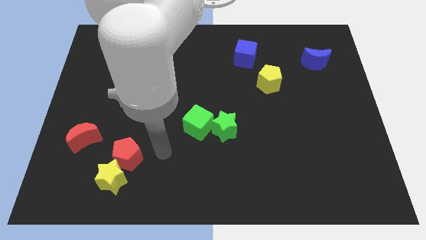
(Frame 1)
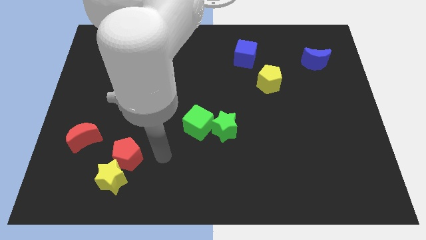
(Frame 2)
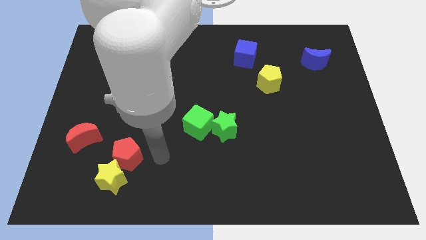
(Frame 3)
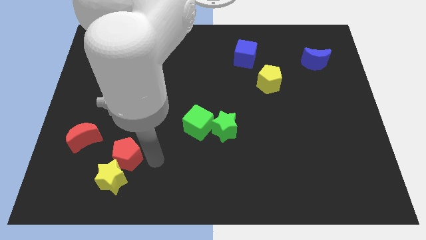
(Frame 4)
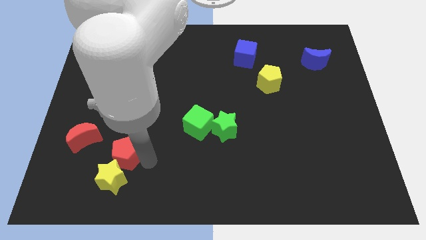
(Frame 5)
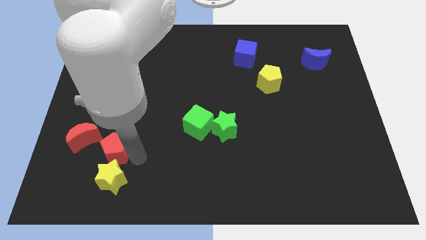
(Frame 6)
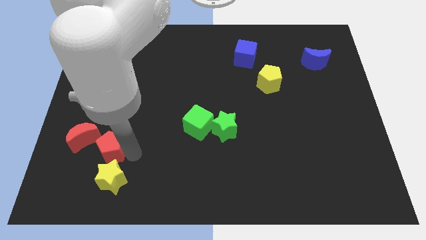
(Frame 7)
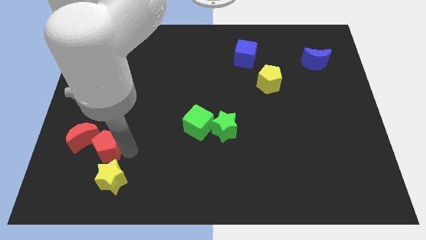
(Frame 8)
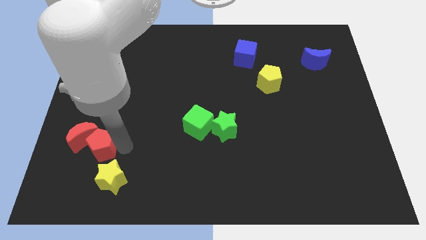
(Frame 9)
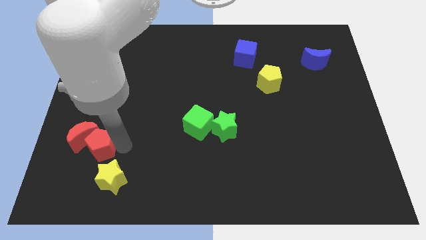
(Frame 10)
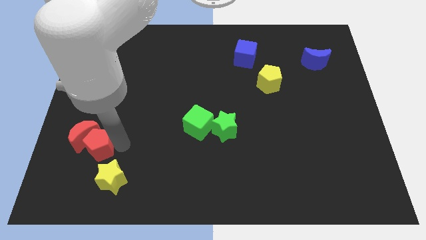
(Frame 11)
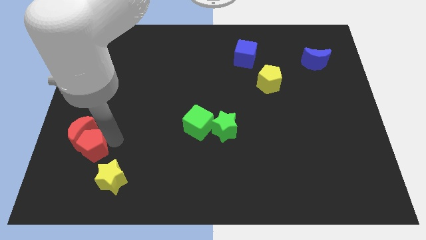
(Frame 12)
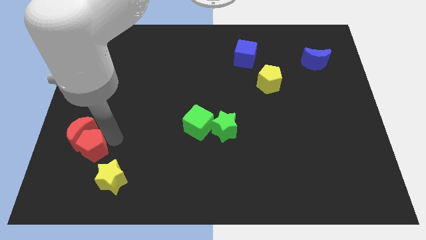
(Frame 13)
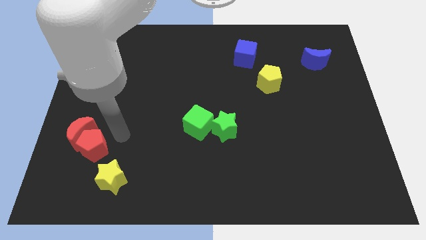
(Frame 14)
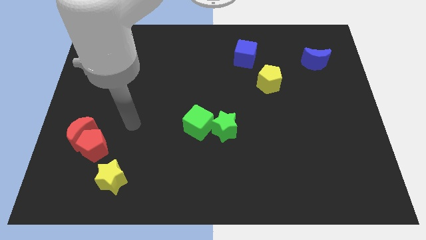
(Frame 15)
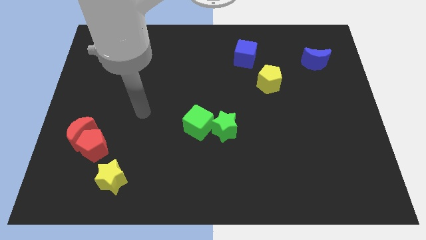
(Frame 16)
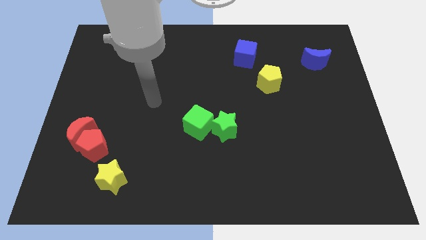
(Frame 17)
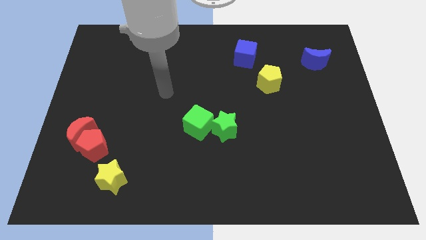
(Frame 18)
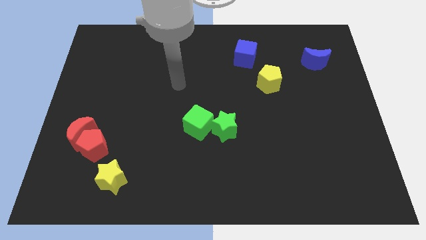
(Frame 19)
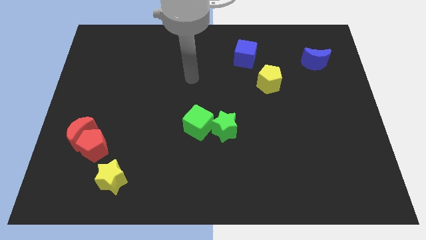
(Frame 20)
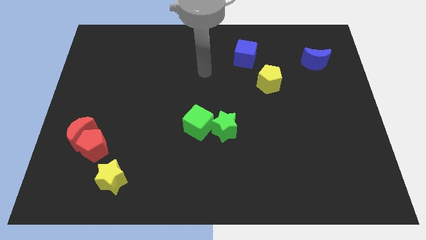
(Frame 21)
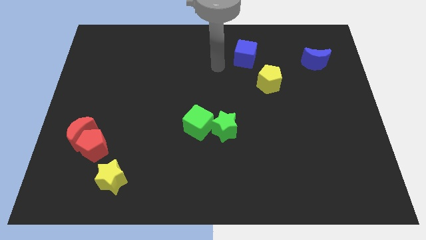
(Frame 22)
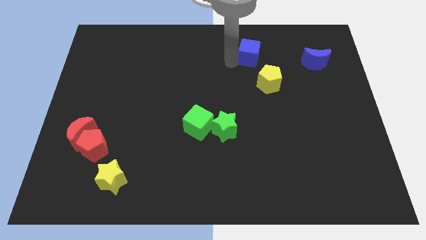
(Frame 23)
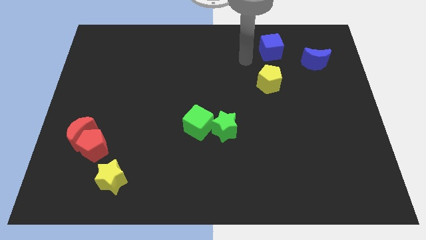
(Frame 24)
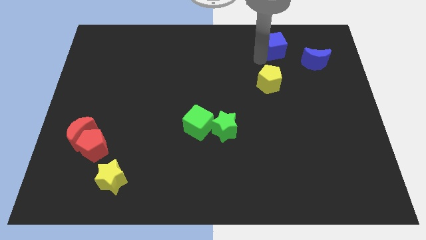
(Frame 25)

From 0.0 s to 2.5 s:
push blue cube above yellow pentagon

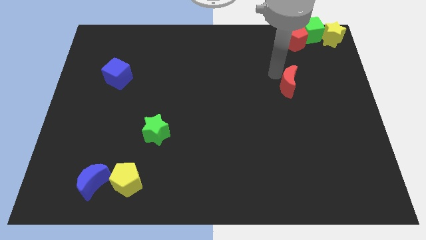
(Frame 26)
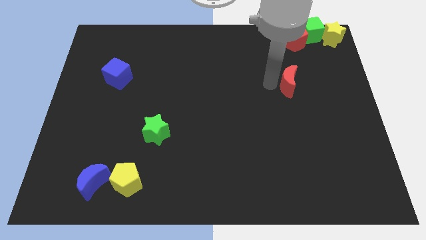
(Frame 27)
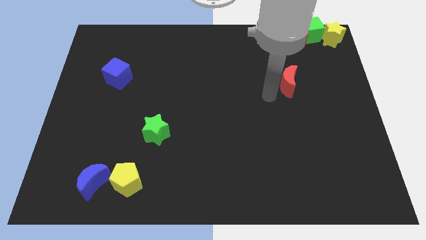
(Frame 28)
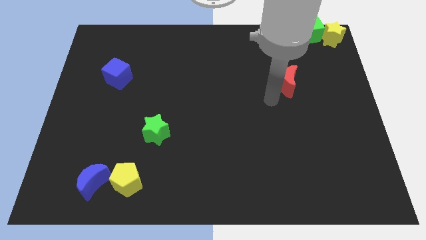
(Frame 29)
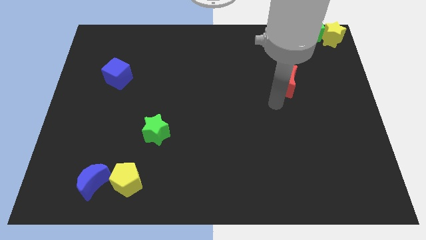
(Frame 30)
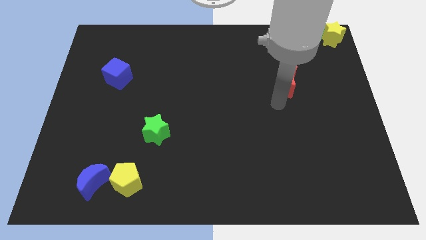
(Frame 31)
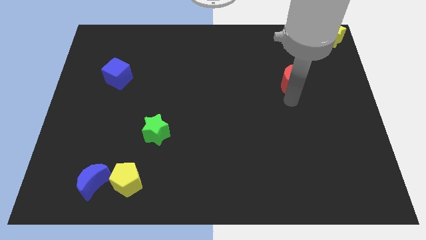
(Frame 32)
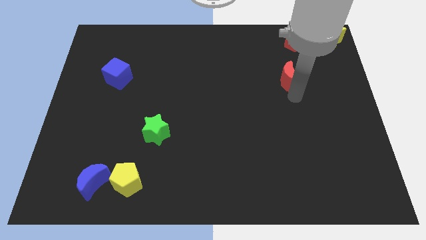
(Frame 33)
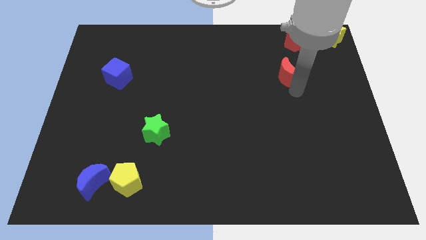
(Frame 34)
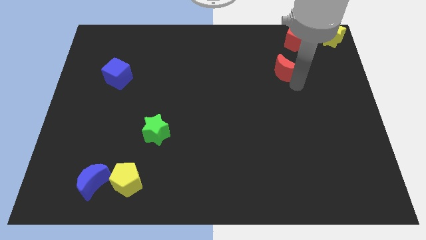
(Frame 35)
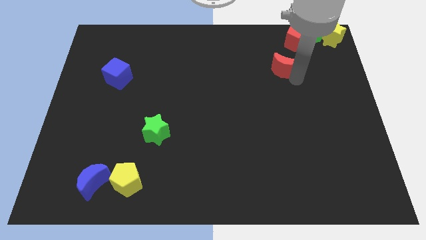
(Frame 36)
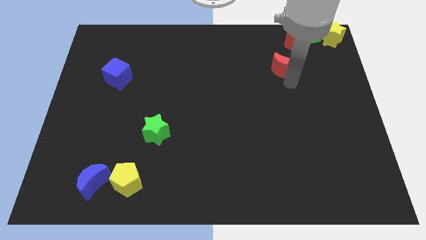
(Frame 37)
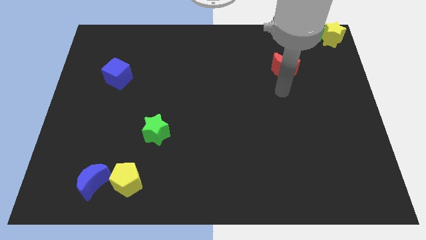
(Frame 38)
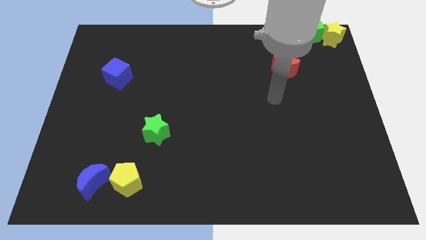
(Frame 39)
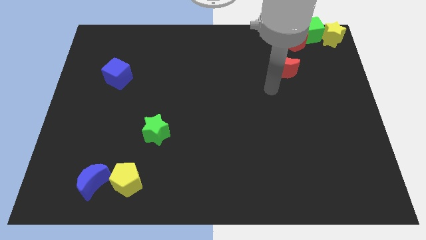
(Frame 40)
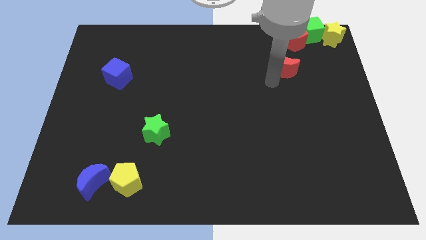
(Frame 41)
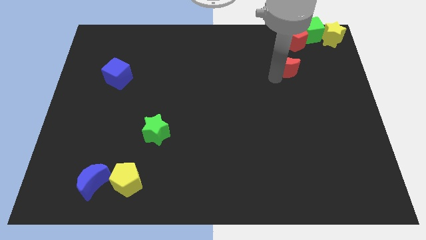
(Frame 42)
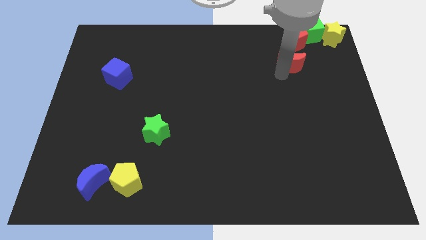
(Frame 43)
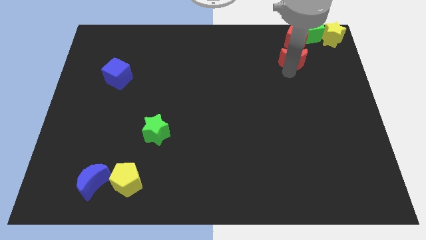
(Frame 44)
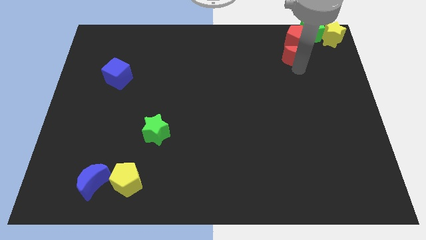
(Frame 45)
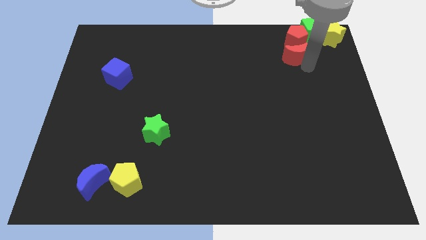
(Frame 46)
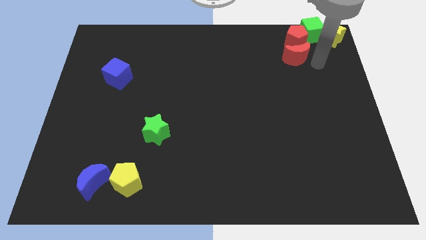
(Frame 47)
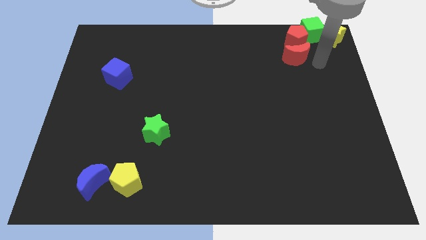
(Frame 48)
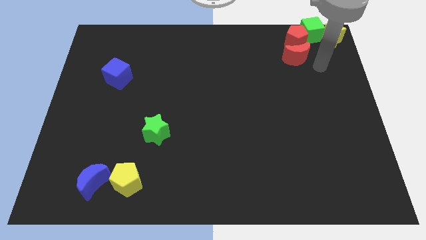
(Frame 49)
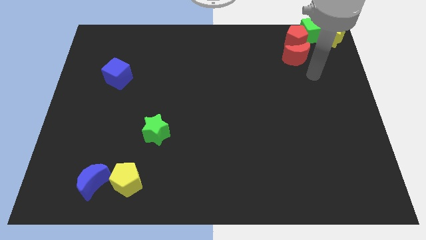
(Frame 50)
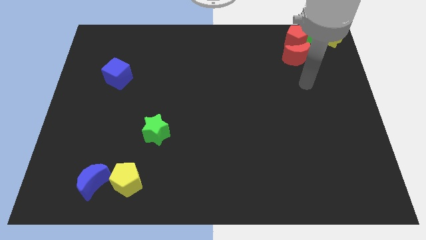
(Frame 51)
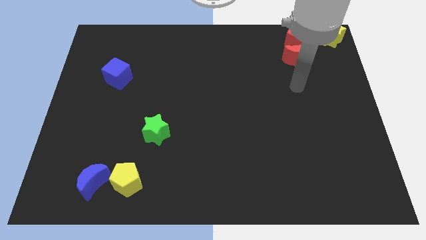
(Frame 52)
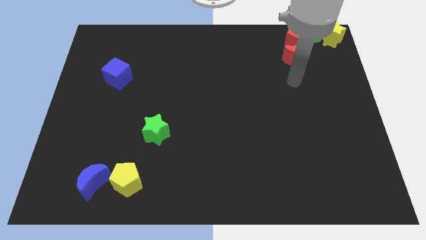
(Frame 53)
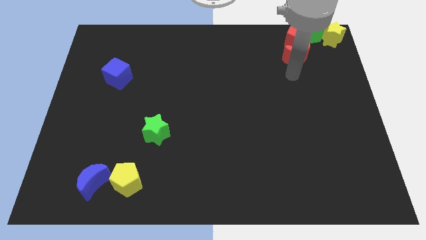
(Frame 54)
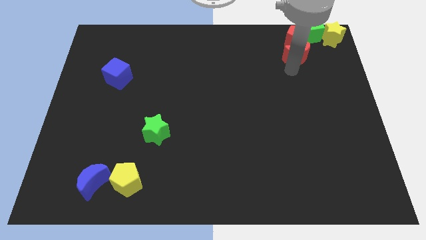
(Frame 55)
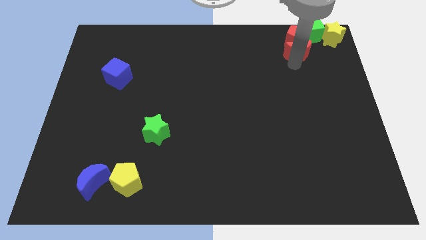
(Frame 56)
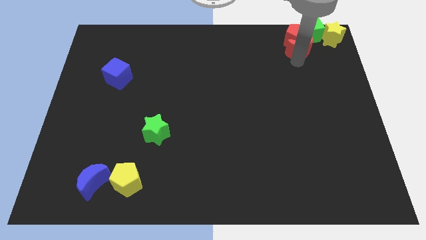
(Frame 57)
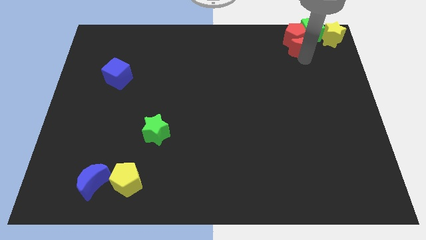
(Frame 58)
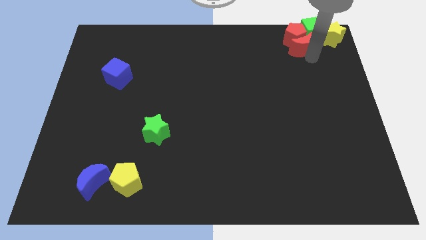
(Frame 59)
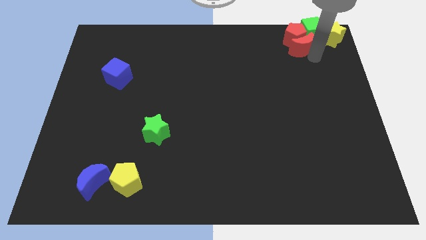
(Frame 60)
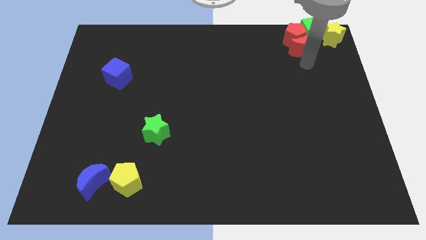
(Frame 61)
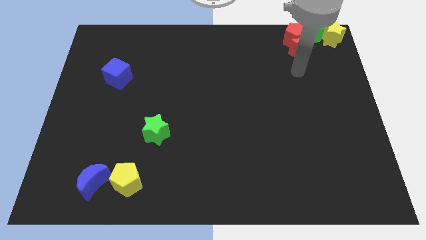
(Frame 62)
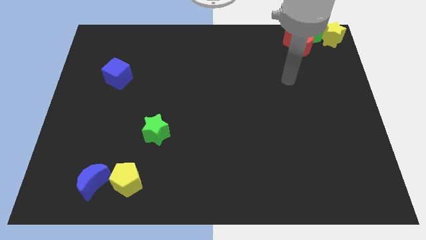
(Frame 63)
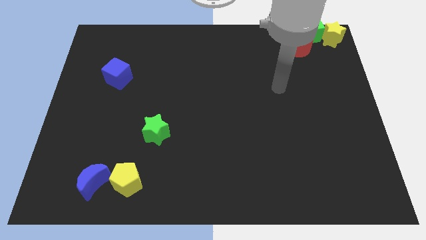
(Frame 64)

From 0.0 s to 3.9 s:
move the red blocks into the green cube

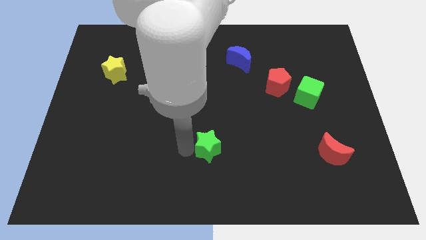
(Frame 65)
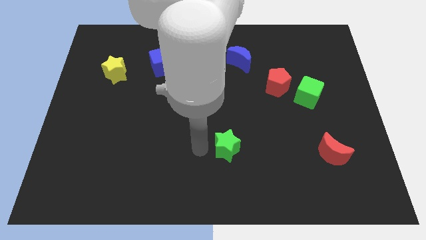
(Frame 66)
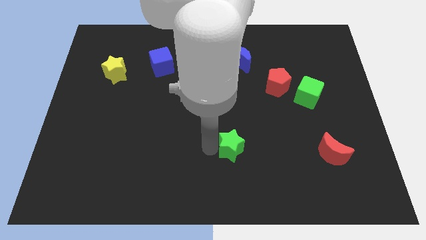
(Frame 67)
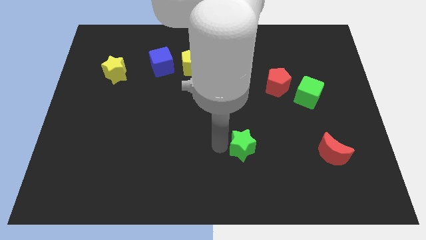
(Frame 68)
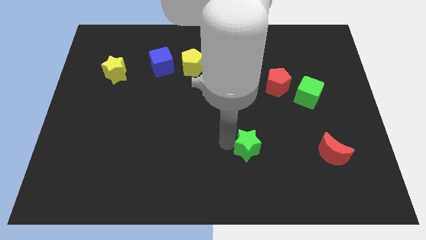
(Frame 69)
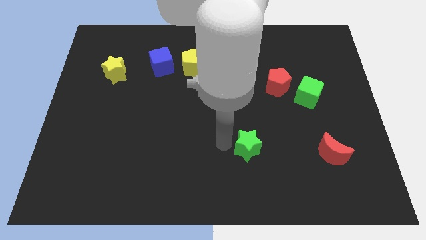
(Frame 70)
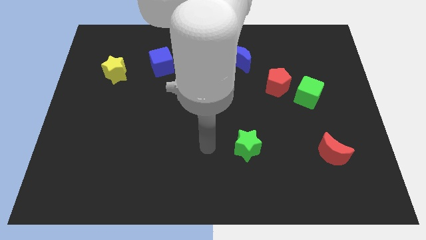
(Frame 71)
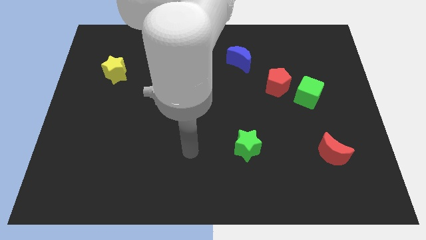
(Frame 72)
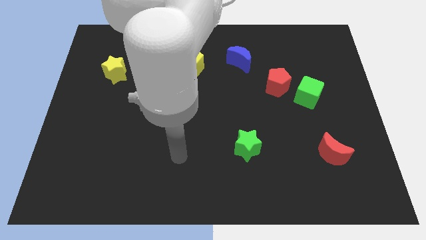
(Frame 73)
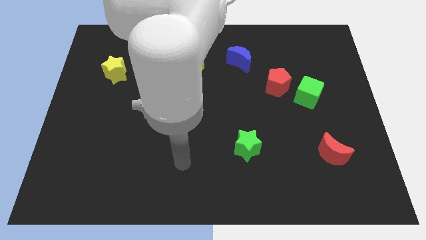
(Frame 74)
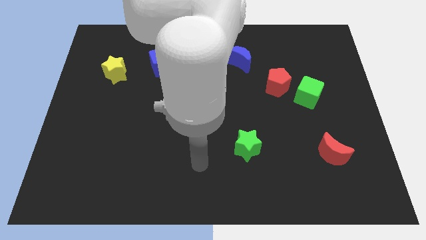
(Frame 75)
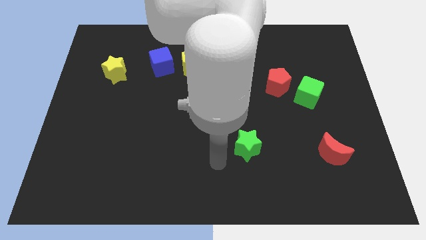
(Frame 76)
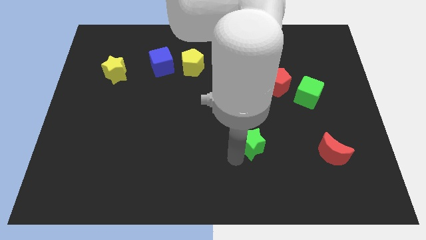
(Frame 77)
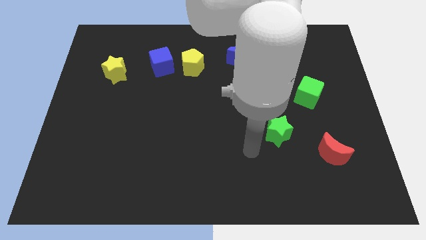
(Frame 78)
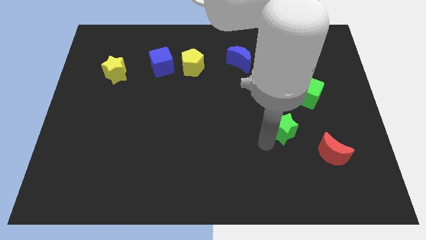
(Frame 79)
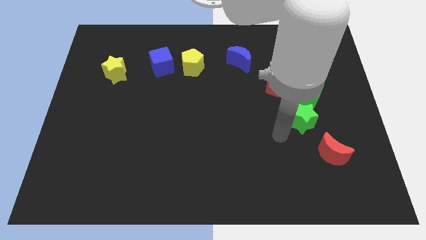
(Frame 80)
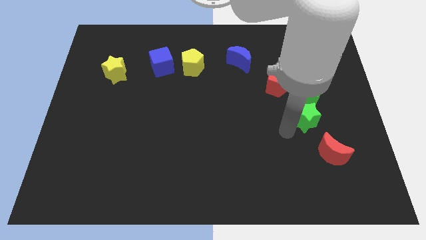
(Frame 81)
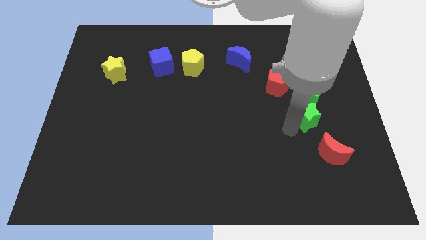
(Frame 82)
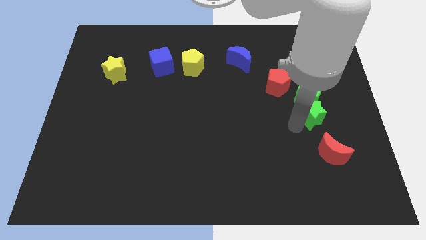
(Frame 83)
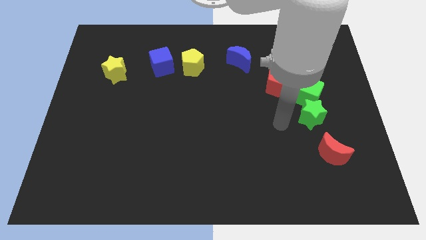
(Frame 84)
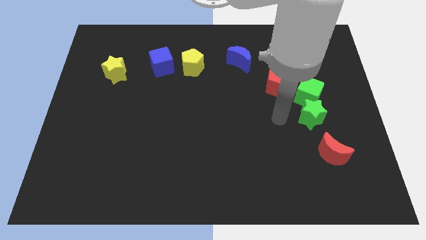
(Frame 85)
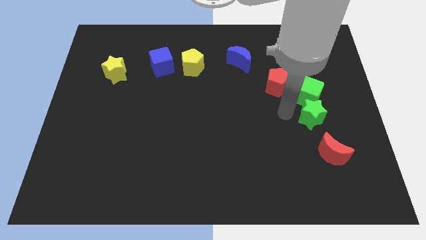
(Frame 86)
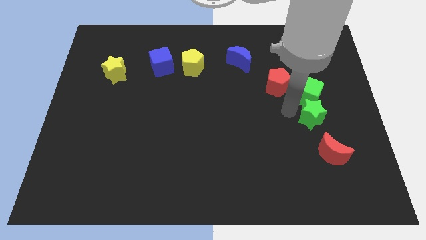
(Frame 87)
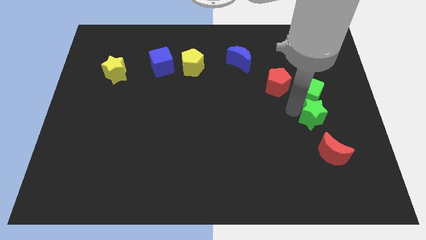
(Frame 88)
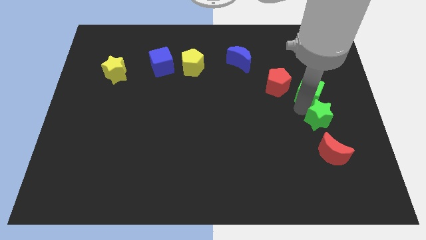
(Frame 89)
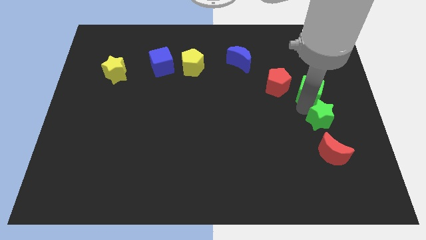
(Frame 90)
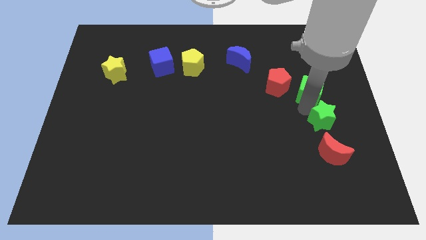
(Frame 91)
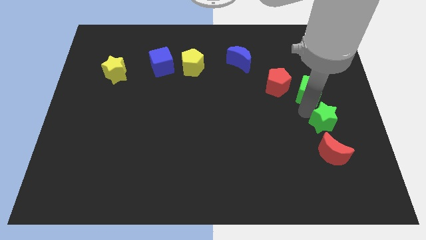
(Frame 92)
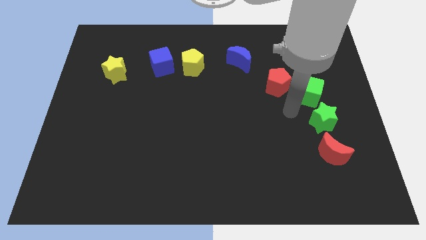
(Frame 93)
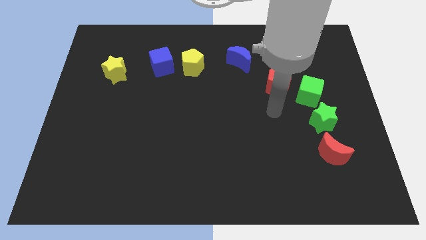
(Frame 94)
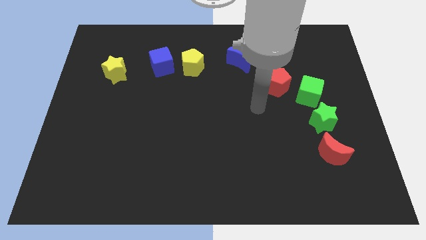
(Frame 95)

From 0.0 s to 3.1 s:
place the green star in between the green cube and the red moon
